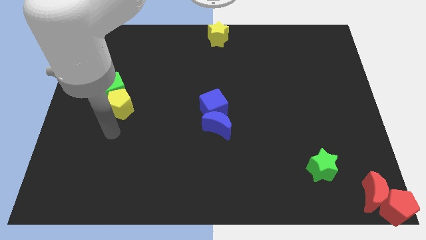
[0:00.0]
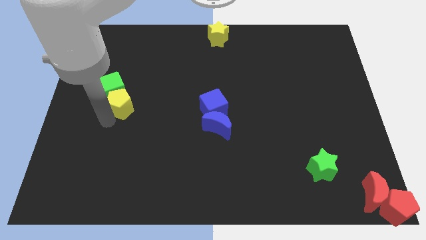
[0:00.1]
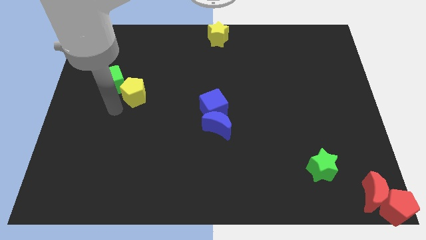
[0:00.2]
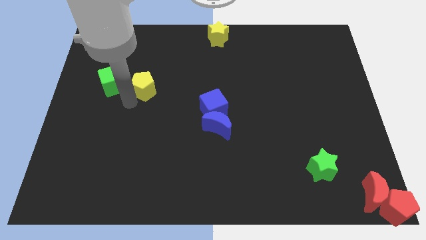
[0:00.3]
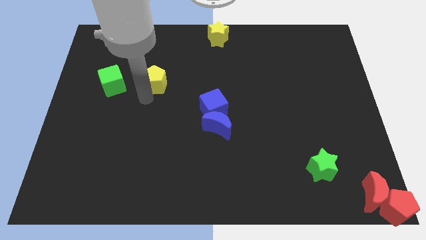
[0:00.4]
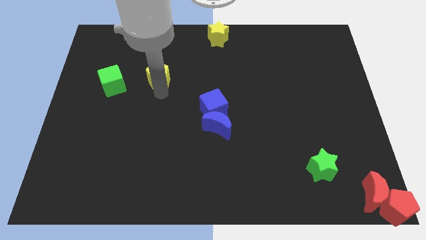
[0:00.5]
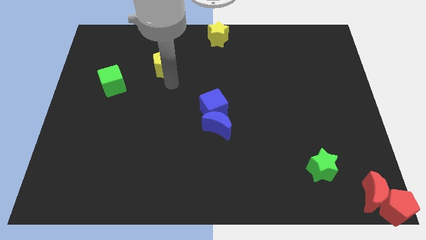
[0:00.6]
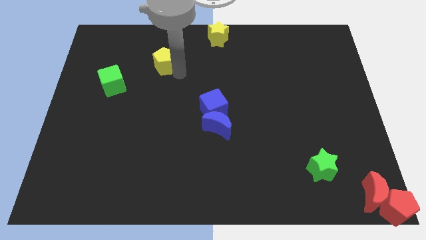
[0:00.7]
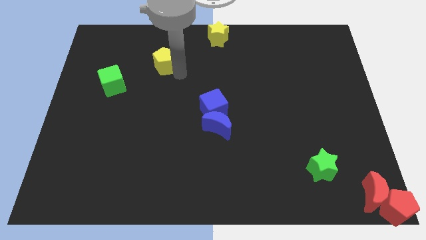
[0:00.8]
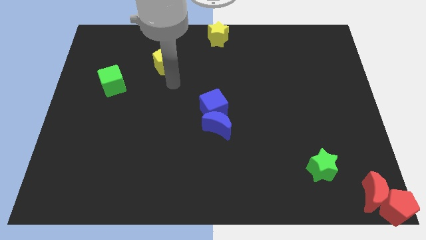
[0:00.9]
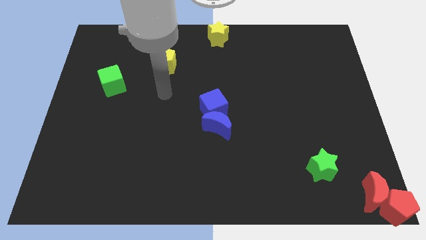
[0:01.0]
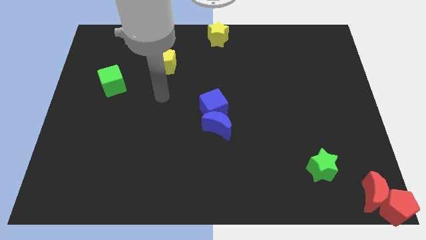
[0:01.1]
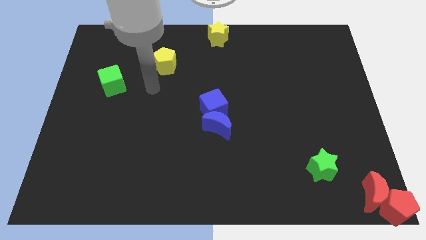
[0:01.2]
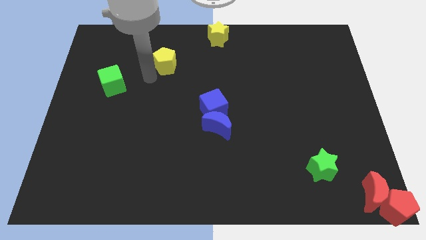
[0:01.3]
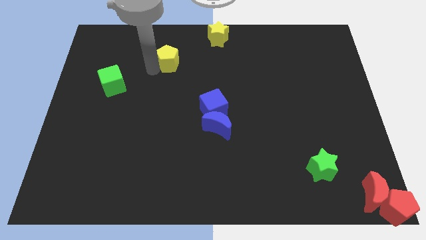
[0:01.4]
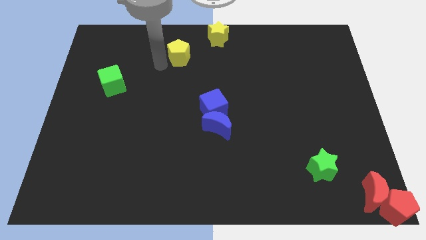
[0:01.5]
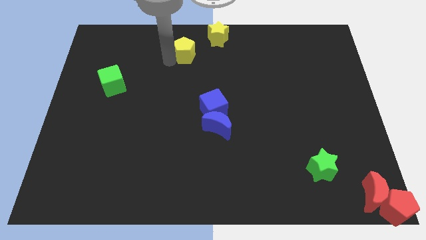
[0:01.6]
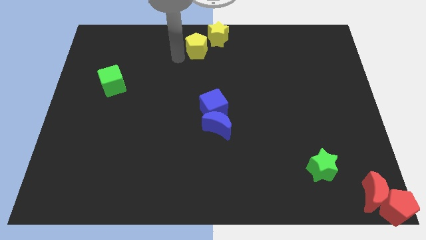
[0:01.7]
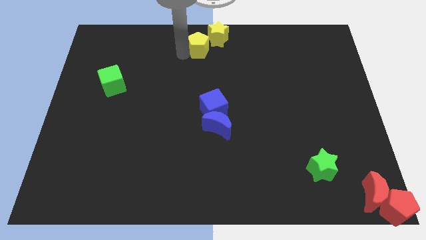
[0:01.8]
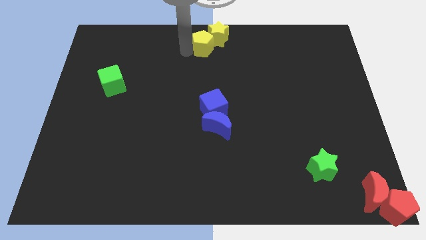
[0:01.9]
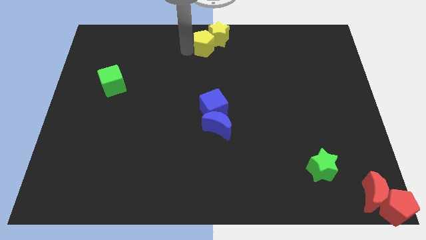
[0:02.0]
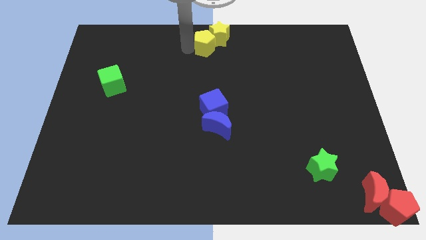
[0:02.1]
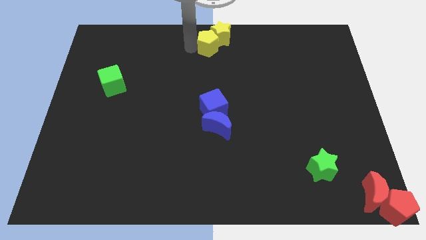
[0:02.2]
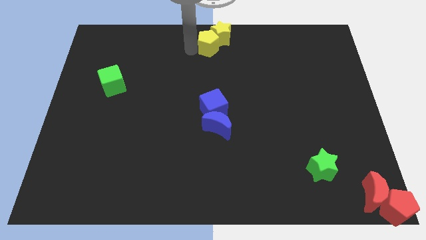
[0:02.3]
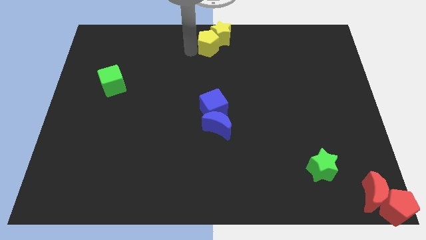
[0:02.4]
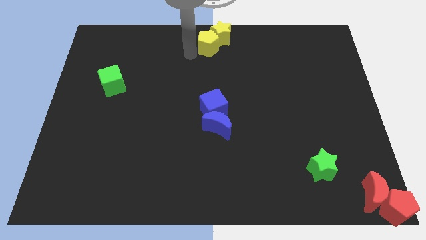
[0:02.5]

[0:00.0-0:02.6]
move the yellow pentagon into bottom left of the yellow star

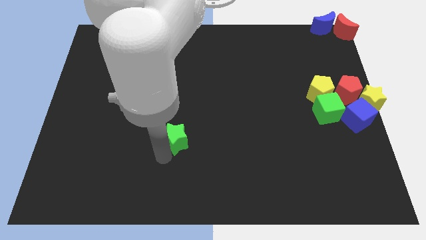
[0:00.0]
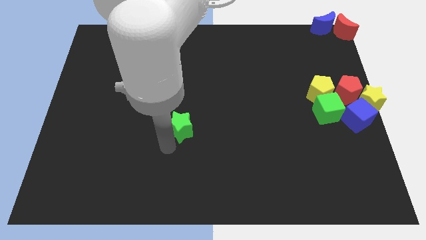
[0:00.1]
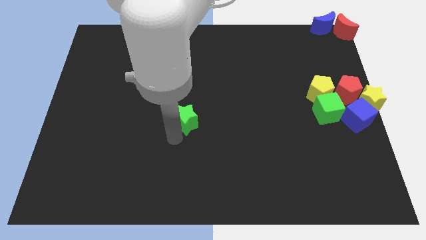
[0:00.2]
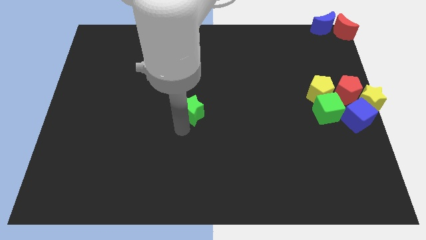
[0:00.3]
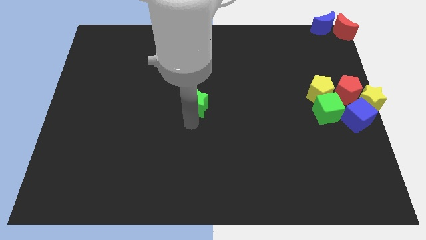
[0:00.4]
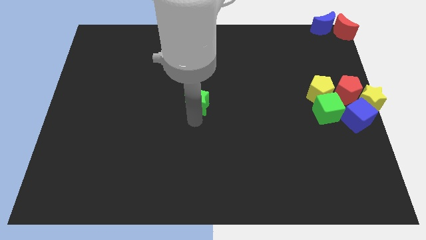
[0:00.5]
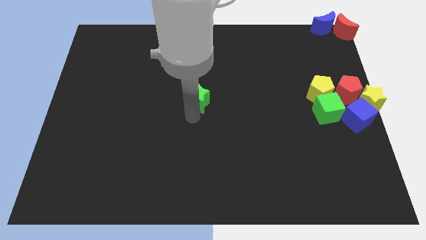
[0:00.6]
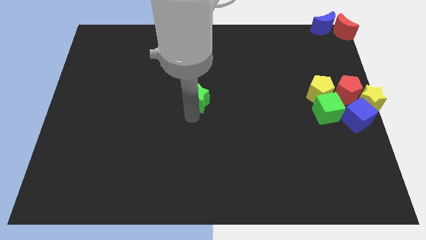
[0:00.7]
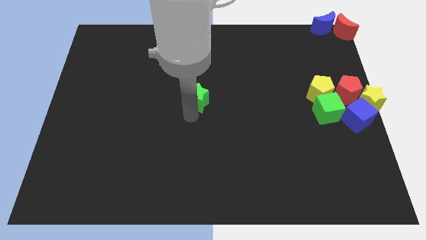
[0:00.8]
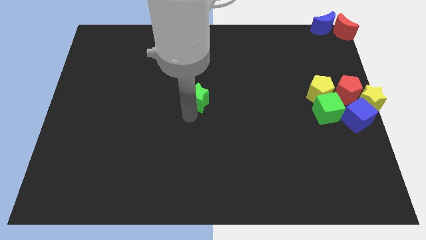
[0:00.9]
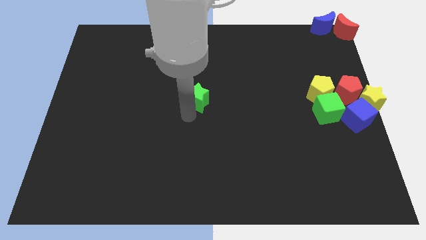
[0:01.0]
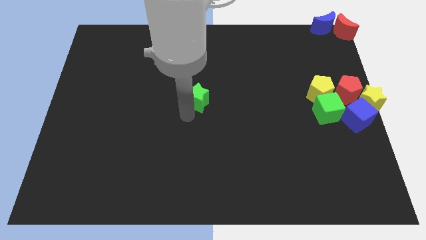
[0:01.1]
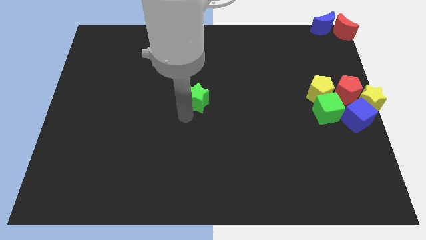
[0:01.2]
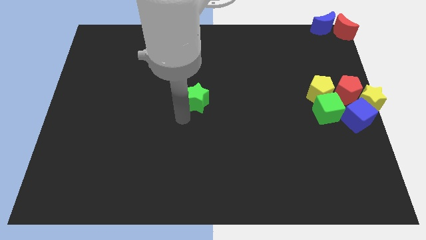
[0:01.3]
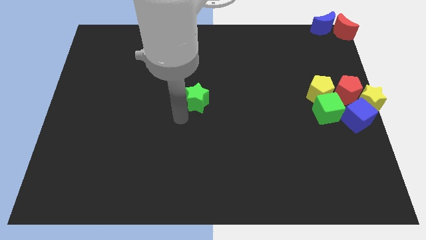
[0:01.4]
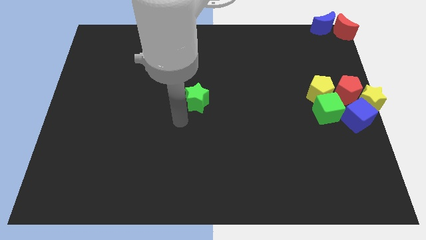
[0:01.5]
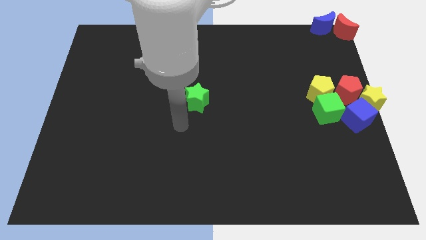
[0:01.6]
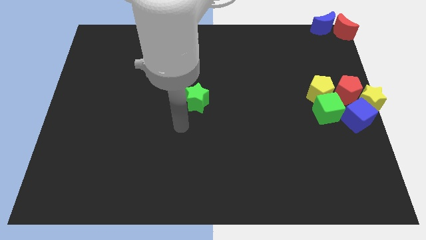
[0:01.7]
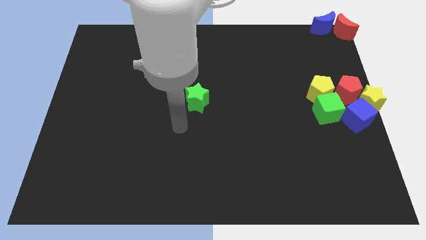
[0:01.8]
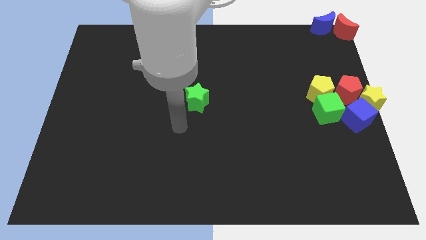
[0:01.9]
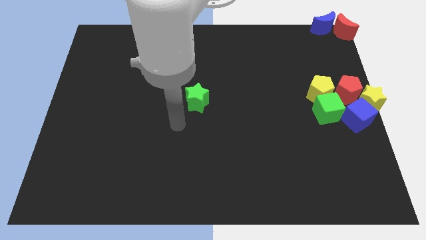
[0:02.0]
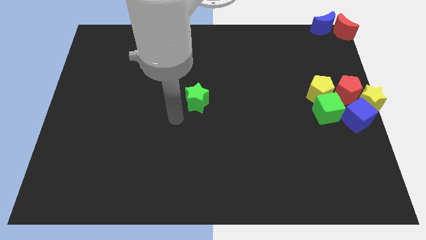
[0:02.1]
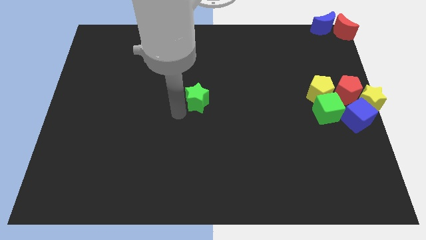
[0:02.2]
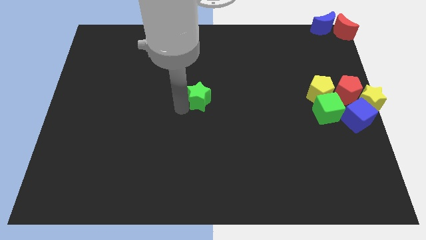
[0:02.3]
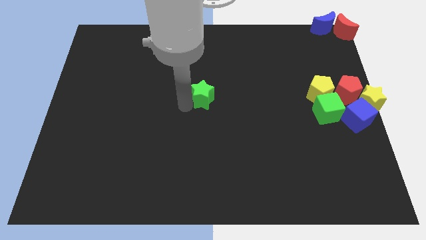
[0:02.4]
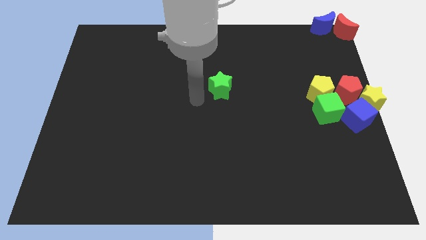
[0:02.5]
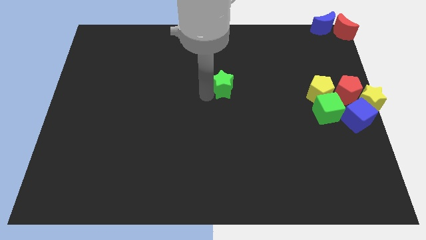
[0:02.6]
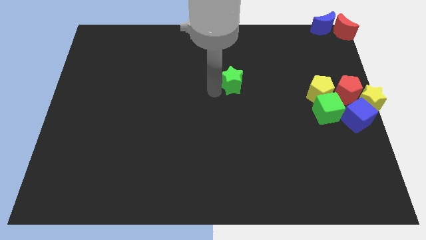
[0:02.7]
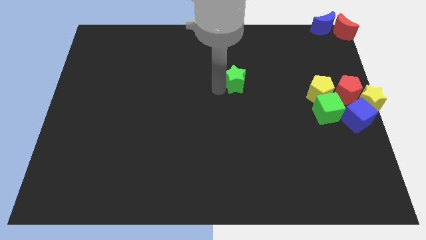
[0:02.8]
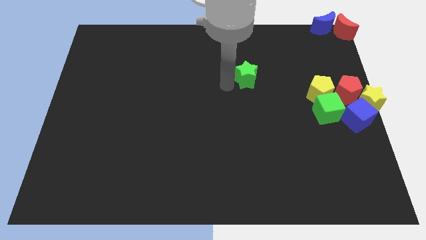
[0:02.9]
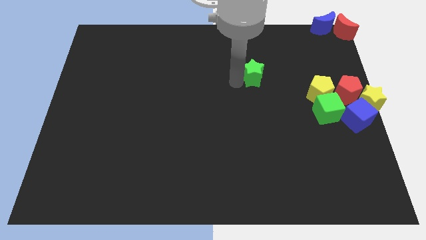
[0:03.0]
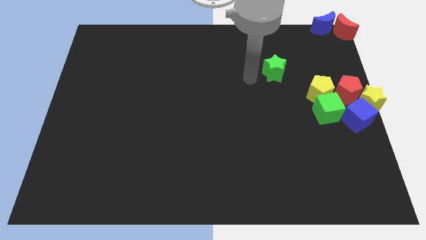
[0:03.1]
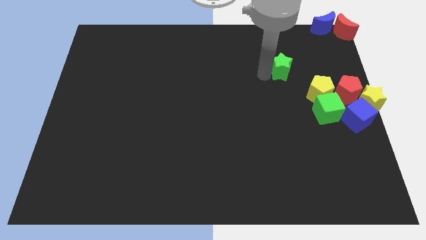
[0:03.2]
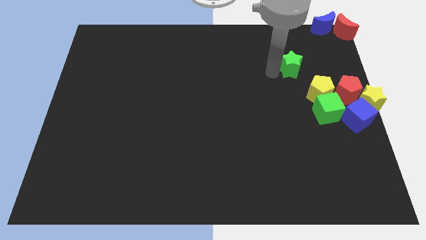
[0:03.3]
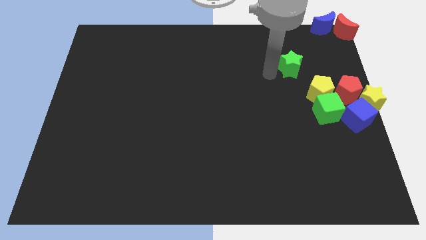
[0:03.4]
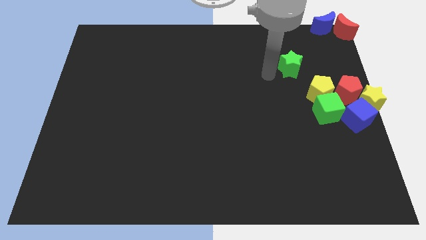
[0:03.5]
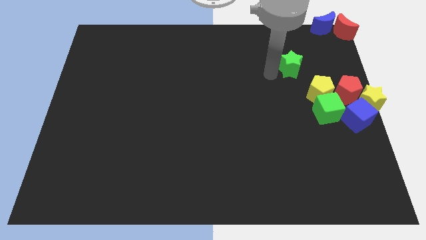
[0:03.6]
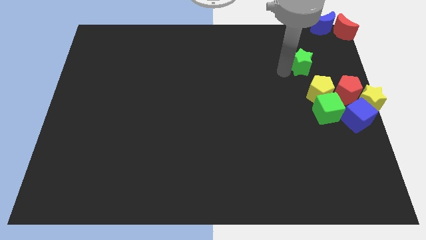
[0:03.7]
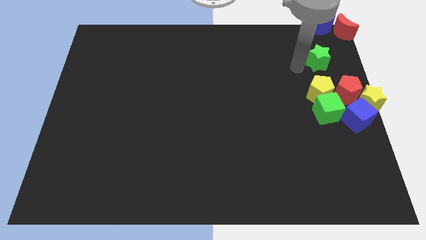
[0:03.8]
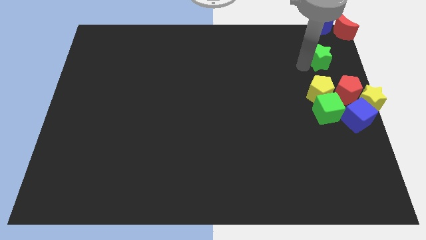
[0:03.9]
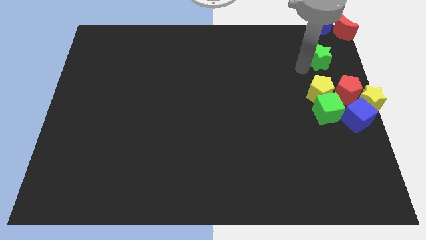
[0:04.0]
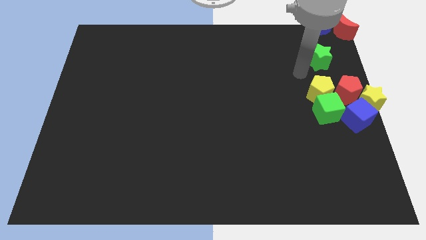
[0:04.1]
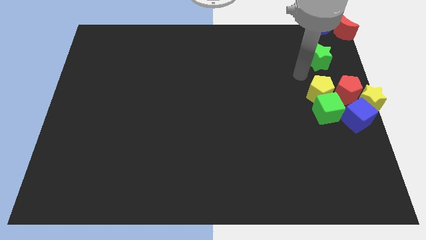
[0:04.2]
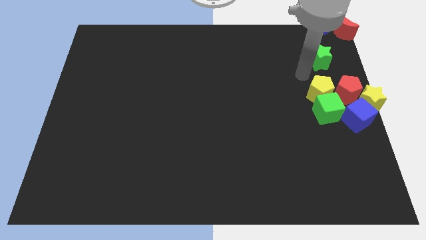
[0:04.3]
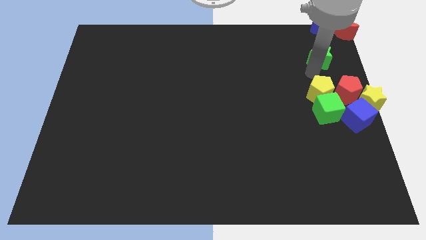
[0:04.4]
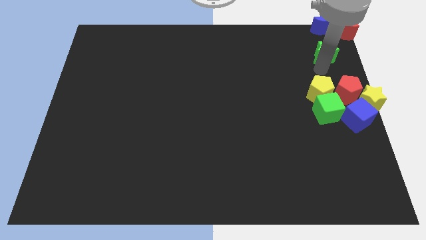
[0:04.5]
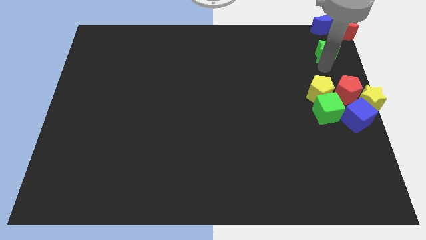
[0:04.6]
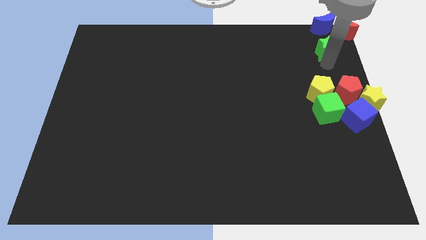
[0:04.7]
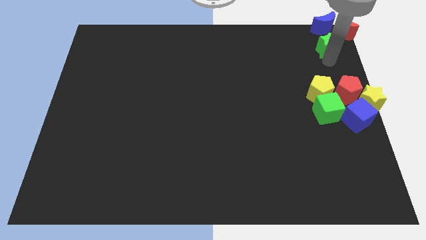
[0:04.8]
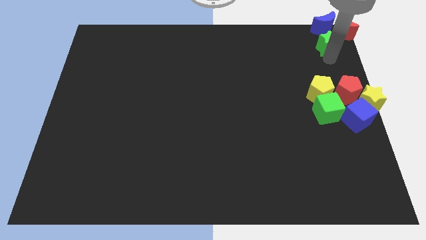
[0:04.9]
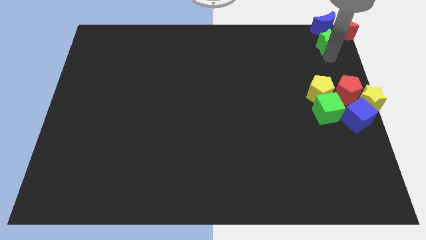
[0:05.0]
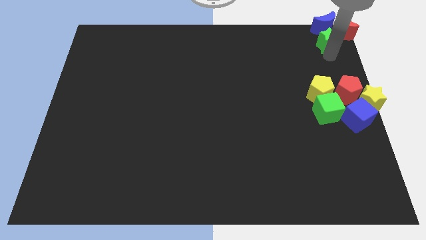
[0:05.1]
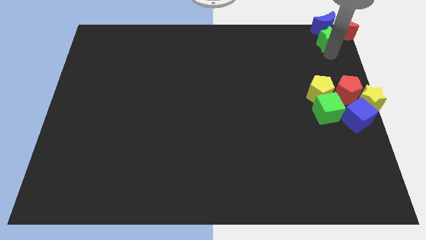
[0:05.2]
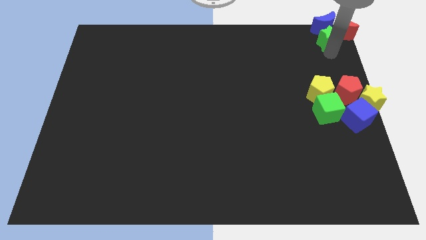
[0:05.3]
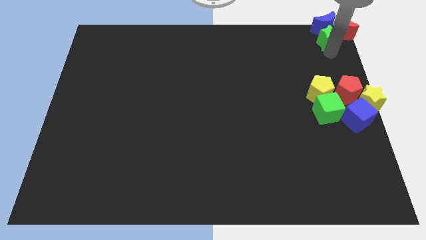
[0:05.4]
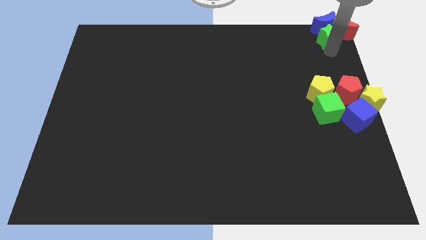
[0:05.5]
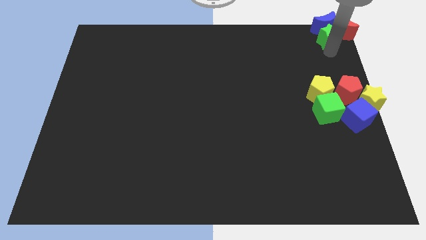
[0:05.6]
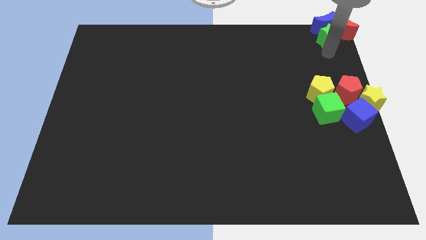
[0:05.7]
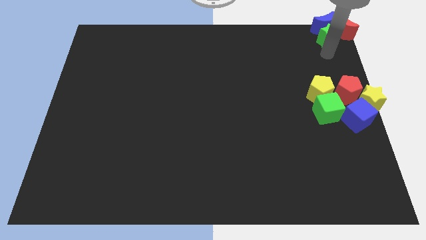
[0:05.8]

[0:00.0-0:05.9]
move the green star towards the top right corner of the board

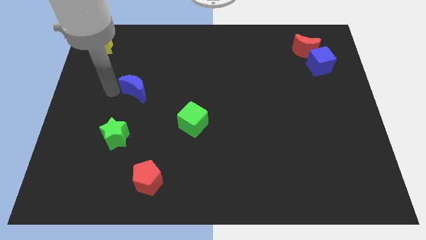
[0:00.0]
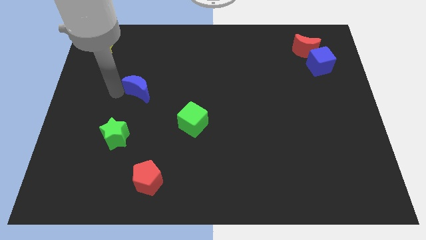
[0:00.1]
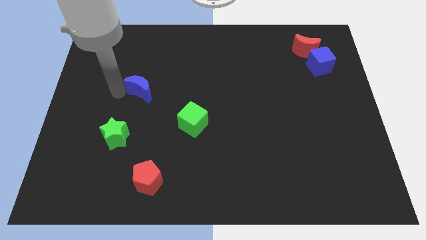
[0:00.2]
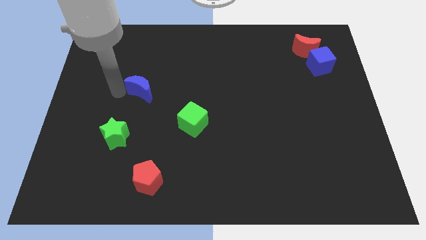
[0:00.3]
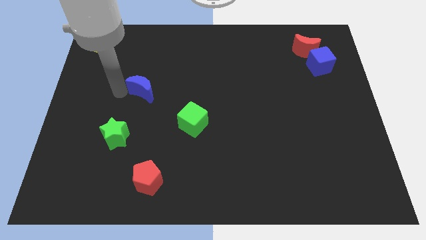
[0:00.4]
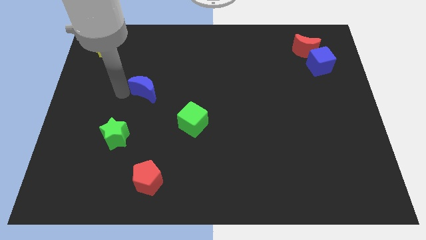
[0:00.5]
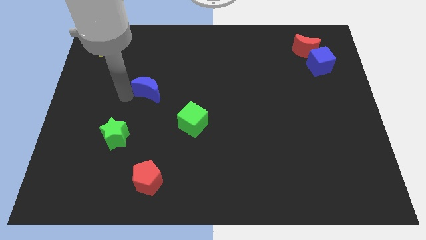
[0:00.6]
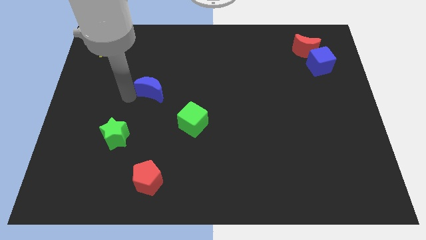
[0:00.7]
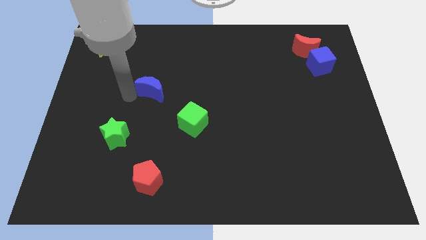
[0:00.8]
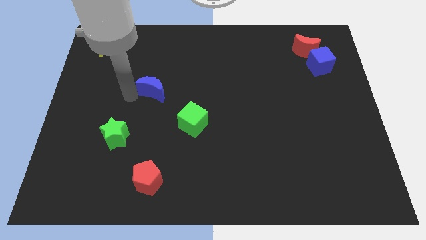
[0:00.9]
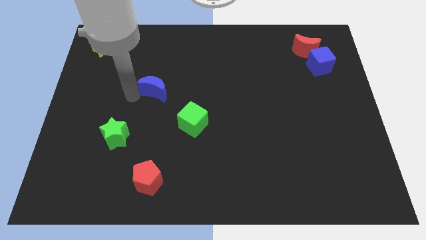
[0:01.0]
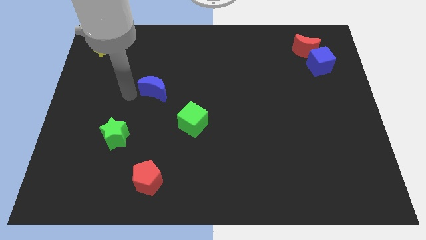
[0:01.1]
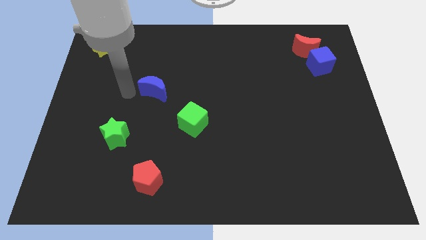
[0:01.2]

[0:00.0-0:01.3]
push blue blue slightly right
